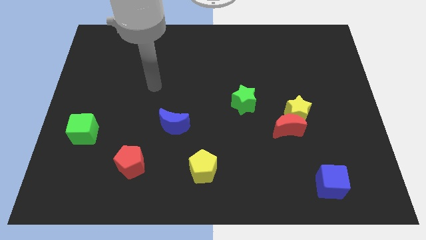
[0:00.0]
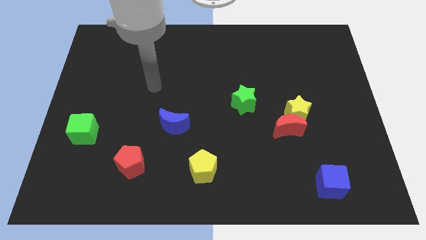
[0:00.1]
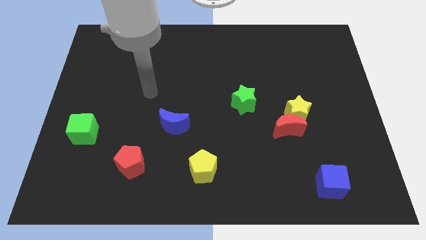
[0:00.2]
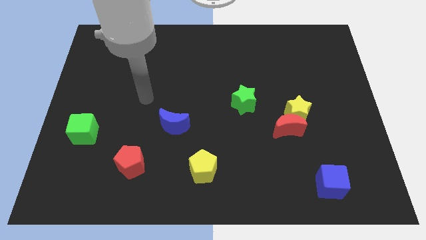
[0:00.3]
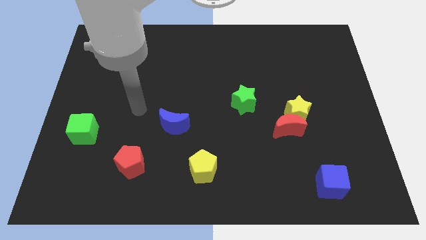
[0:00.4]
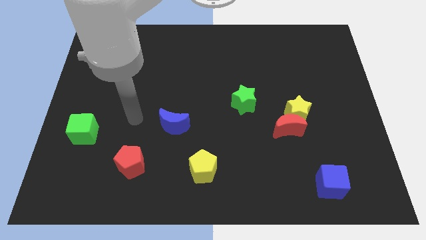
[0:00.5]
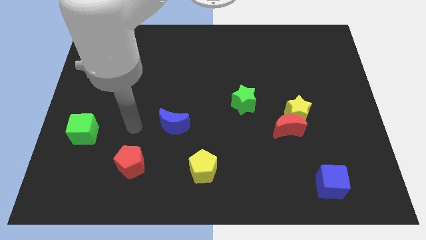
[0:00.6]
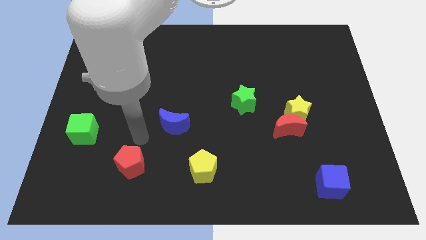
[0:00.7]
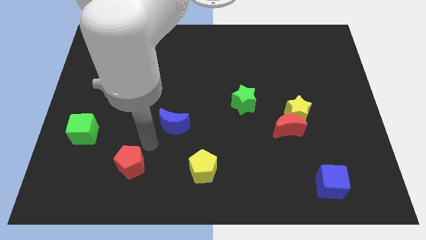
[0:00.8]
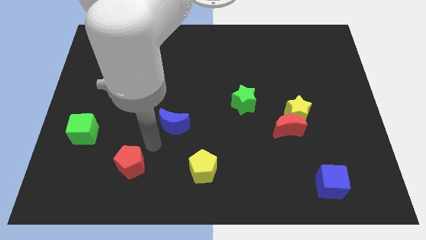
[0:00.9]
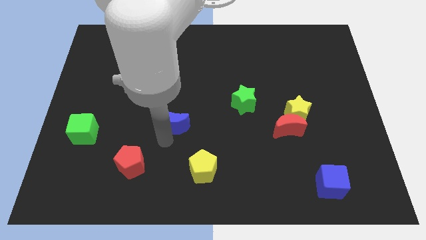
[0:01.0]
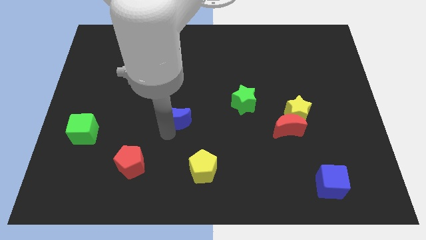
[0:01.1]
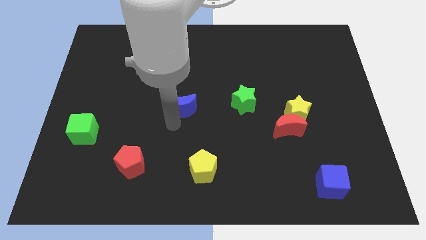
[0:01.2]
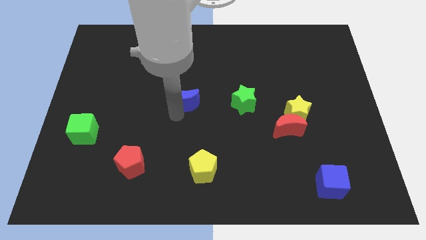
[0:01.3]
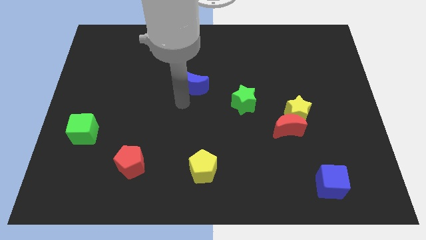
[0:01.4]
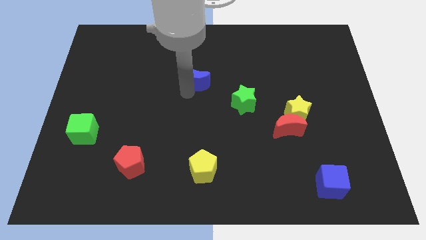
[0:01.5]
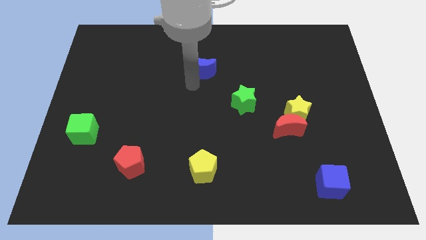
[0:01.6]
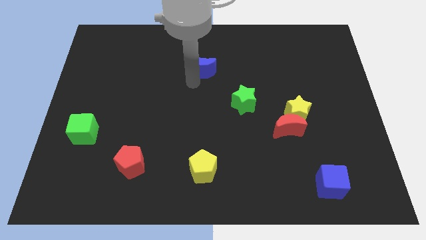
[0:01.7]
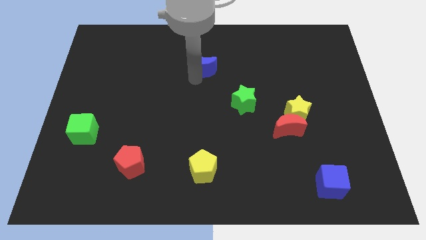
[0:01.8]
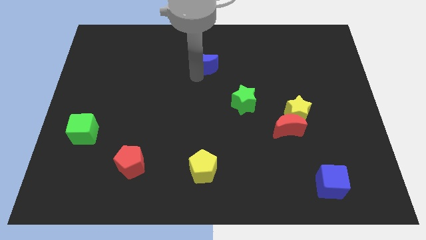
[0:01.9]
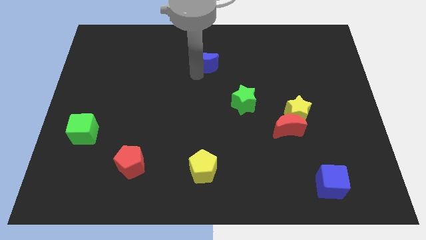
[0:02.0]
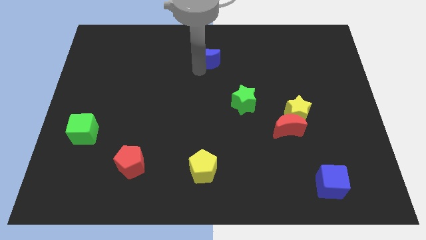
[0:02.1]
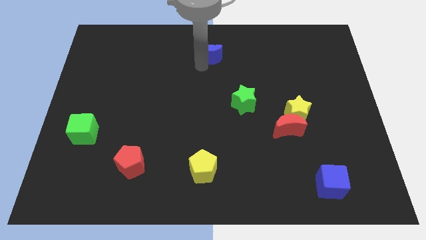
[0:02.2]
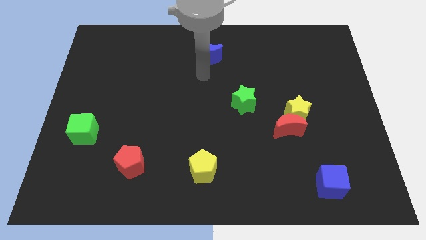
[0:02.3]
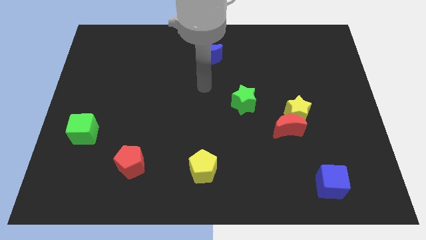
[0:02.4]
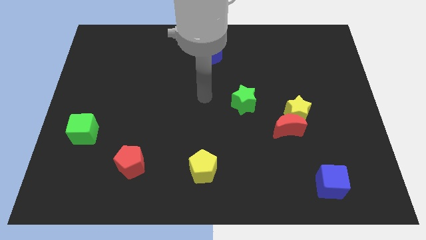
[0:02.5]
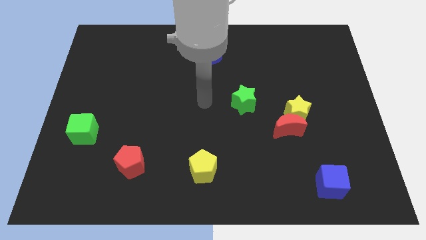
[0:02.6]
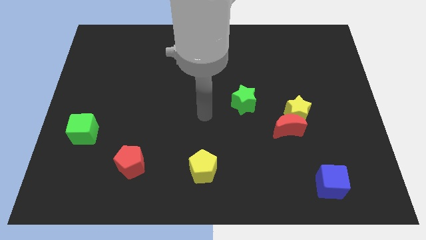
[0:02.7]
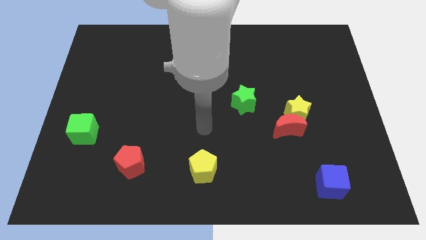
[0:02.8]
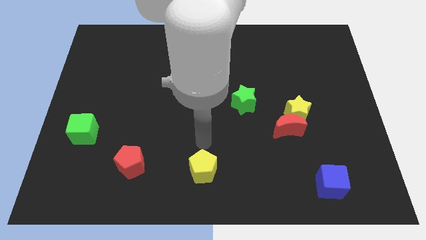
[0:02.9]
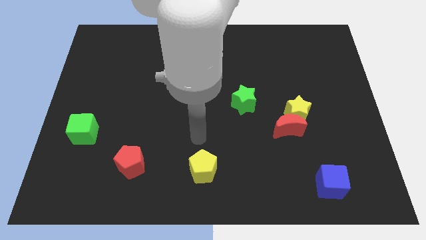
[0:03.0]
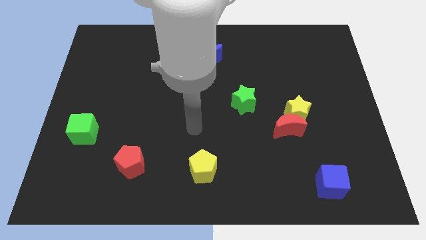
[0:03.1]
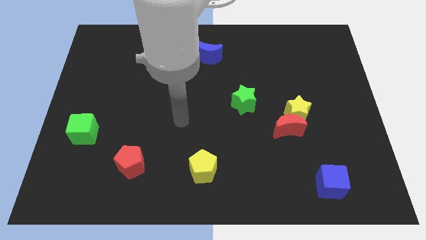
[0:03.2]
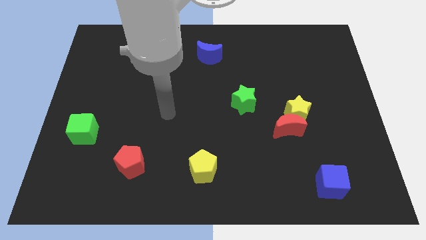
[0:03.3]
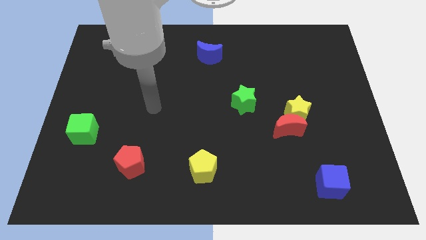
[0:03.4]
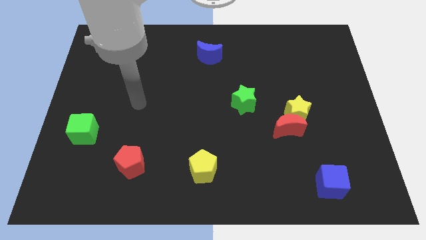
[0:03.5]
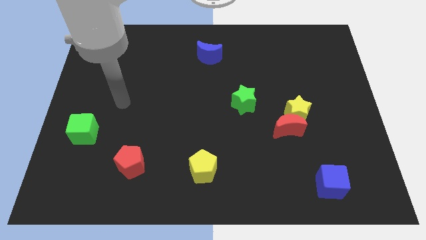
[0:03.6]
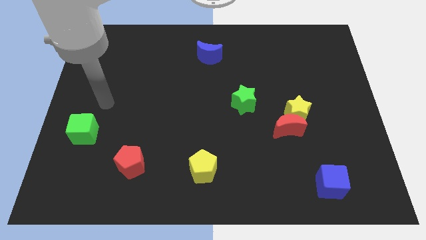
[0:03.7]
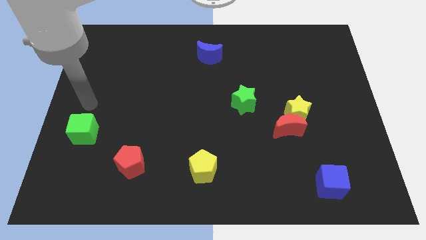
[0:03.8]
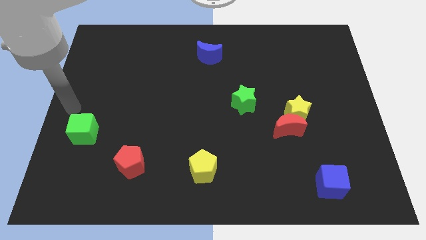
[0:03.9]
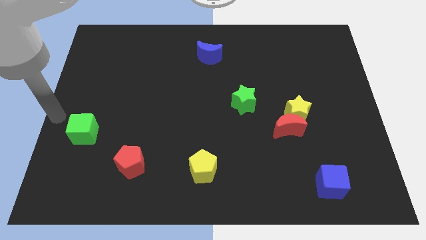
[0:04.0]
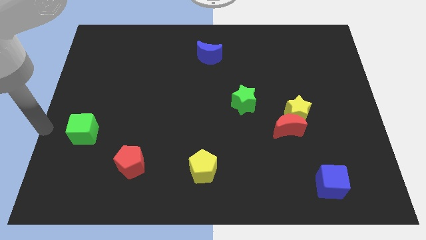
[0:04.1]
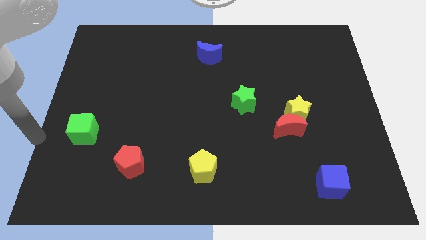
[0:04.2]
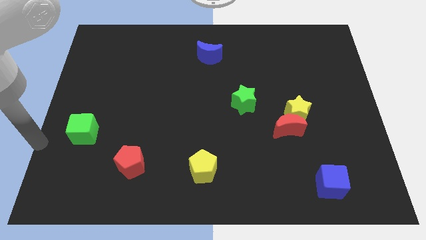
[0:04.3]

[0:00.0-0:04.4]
move the blue moon towards the top side

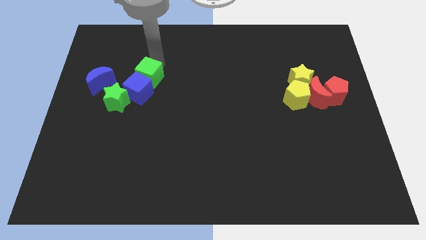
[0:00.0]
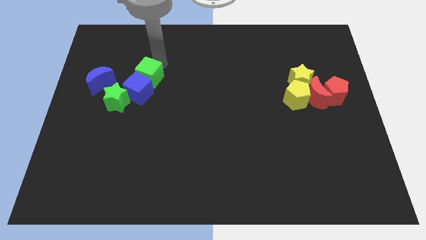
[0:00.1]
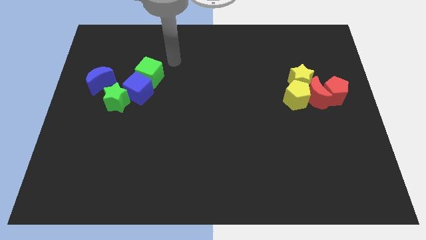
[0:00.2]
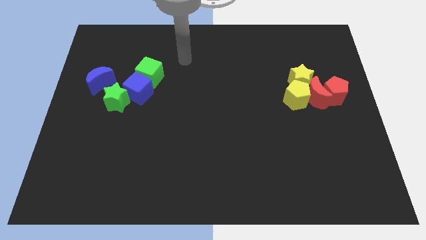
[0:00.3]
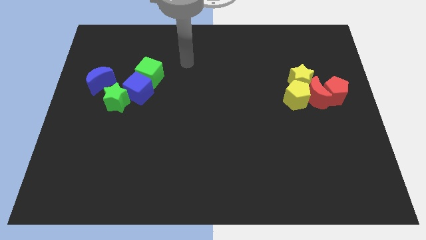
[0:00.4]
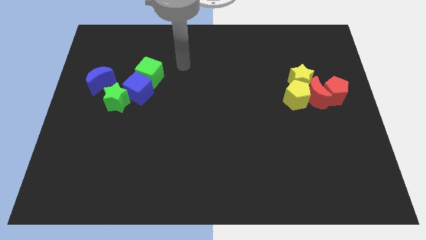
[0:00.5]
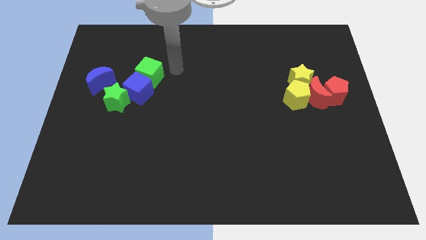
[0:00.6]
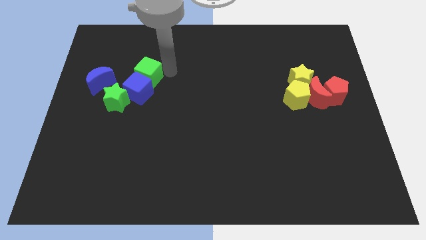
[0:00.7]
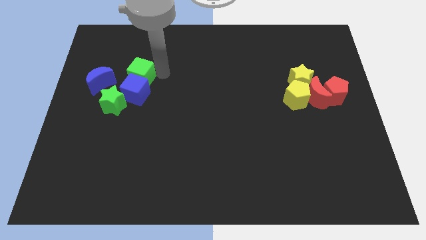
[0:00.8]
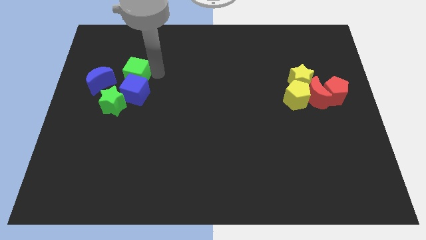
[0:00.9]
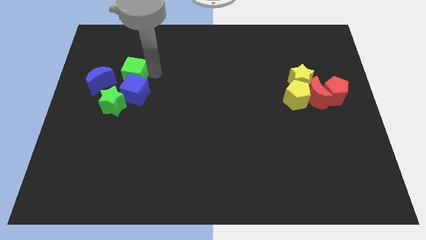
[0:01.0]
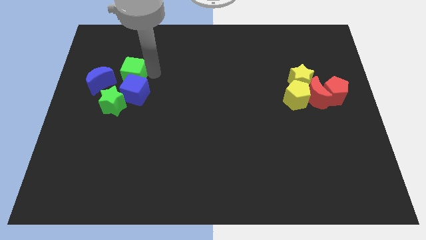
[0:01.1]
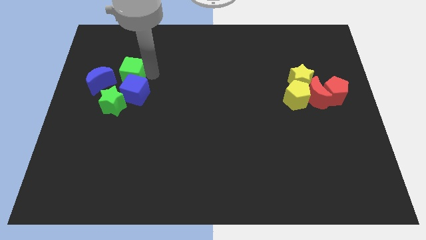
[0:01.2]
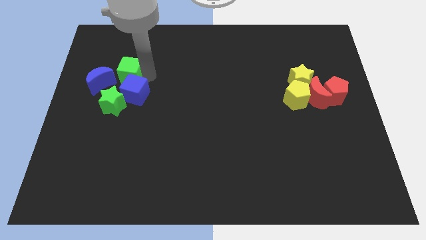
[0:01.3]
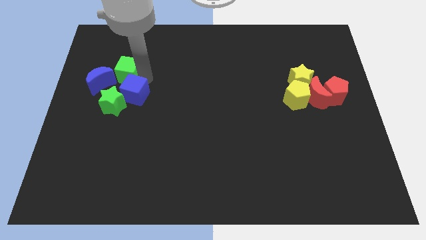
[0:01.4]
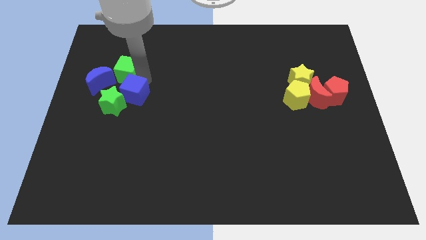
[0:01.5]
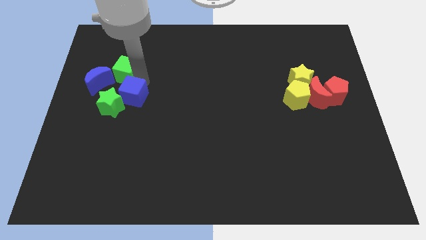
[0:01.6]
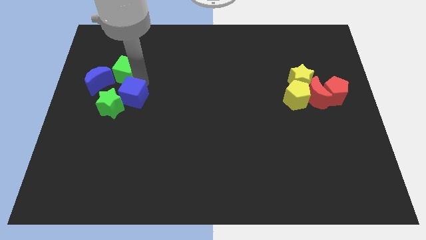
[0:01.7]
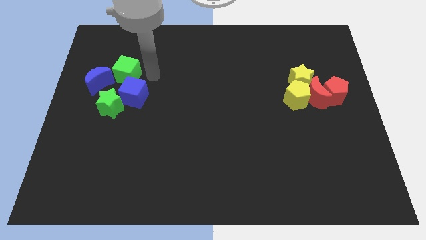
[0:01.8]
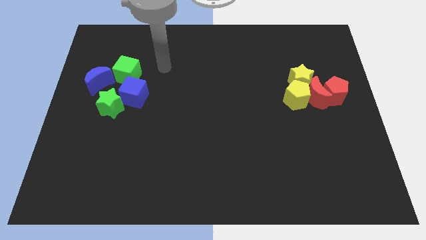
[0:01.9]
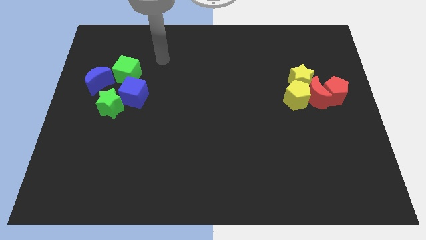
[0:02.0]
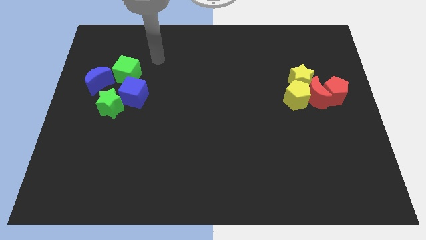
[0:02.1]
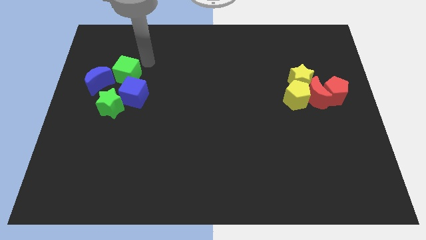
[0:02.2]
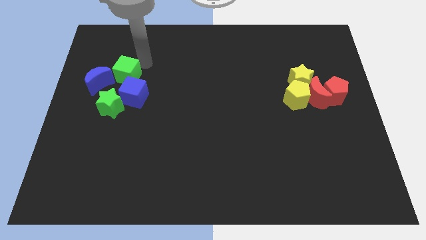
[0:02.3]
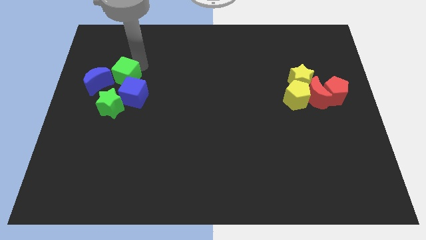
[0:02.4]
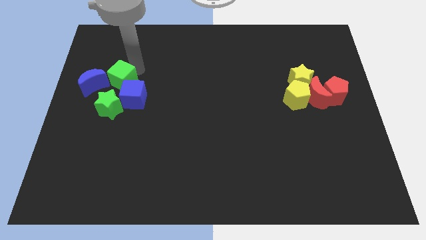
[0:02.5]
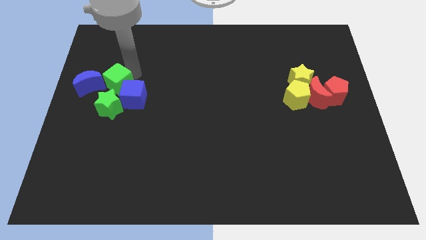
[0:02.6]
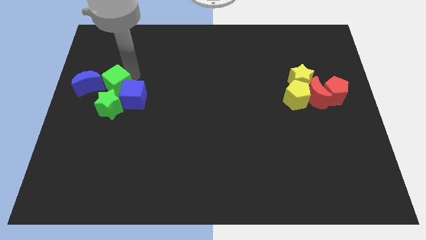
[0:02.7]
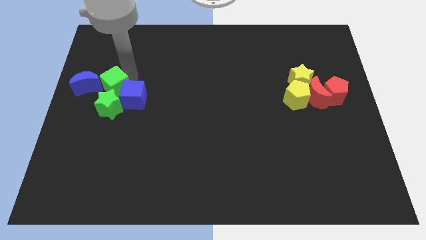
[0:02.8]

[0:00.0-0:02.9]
place green cube beside green star

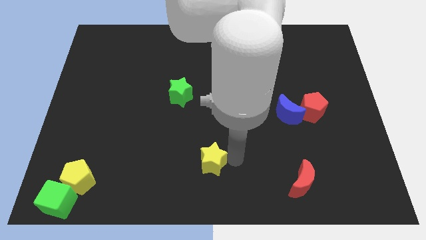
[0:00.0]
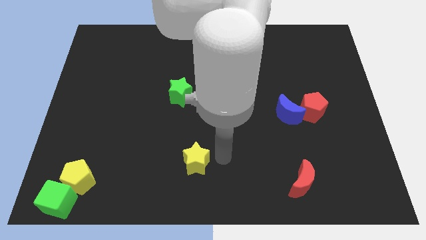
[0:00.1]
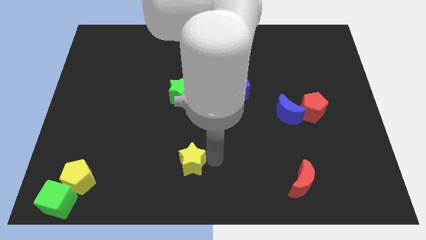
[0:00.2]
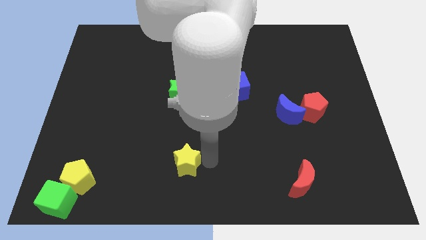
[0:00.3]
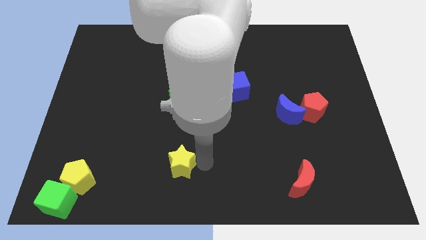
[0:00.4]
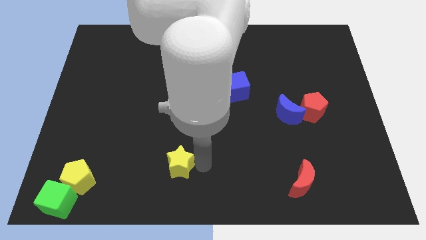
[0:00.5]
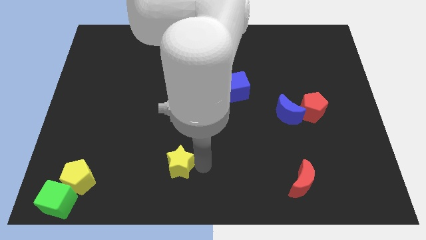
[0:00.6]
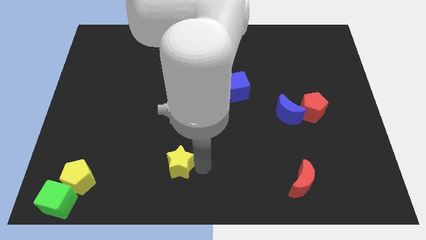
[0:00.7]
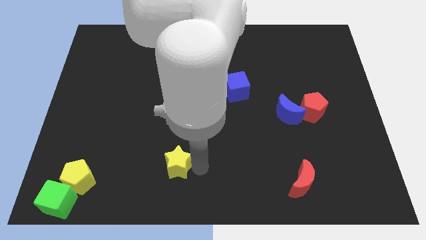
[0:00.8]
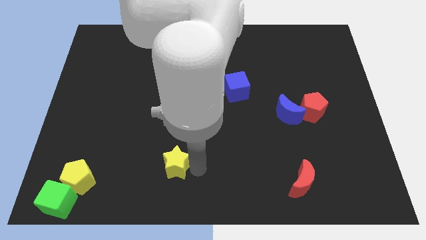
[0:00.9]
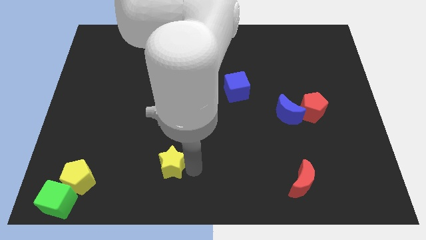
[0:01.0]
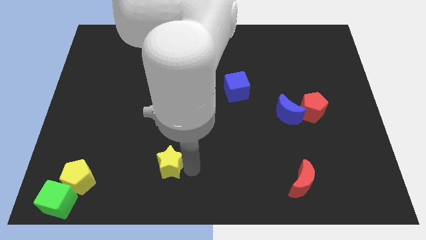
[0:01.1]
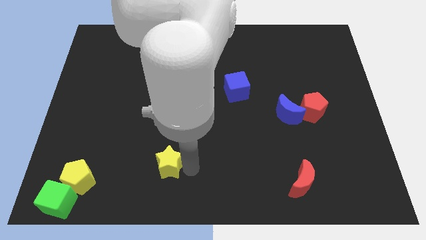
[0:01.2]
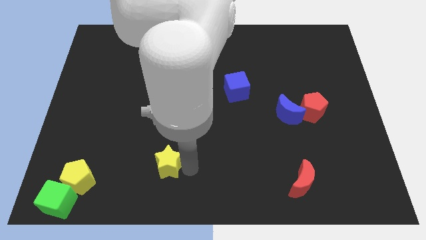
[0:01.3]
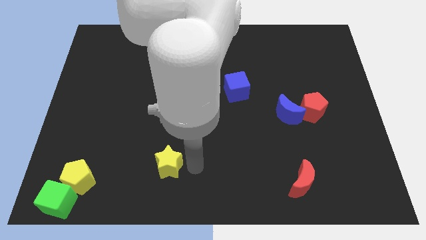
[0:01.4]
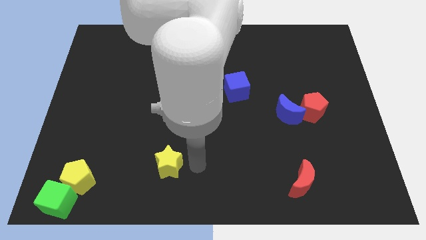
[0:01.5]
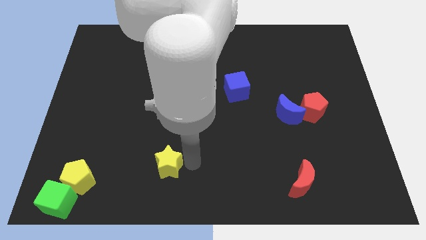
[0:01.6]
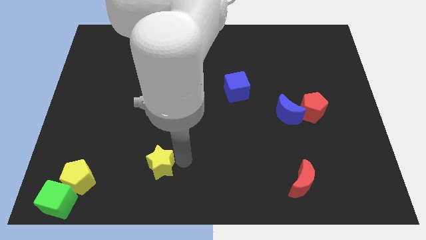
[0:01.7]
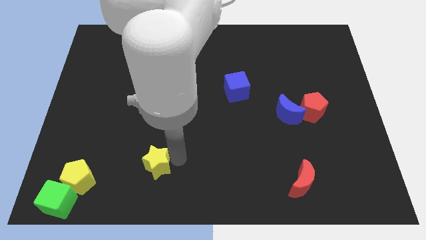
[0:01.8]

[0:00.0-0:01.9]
push the yellow star to the left of the cube
